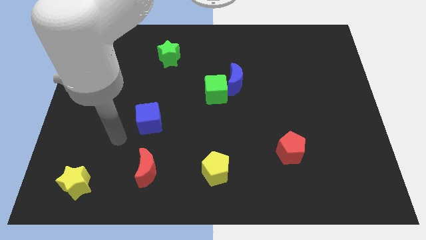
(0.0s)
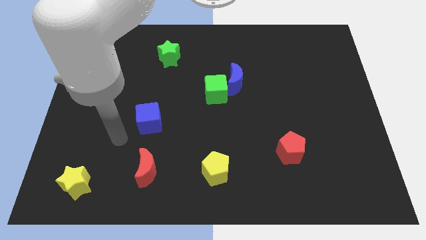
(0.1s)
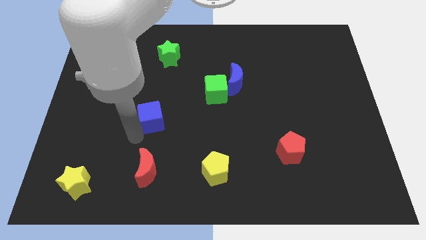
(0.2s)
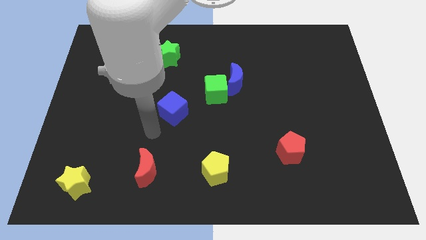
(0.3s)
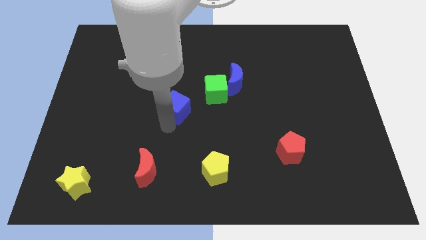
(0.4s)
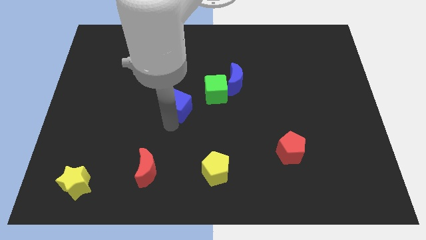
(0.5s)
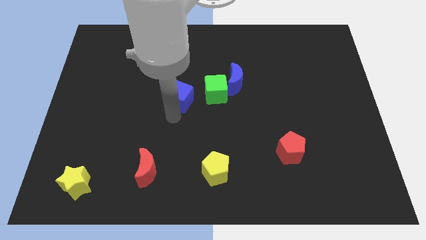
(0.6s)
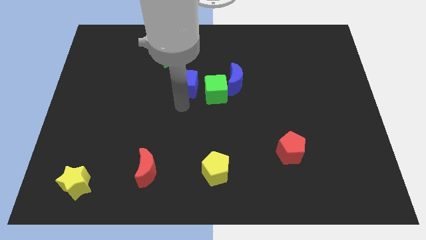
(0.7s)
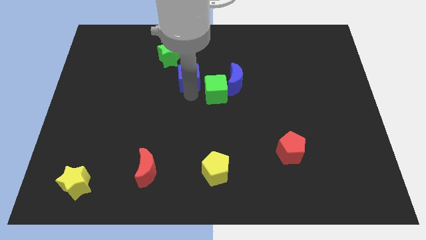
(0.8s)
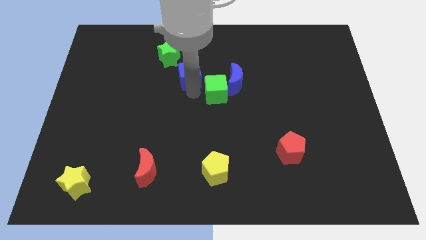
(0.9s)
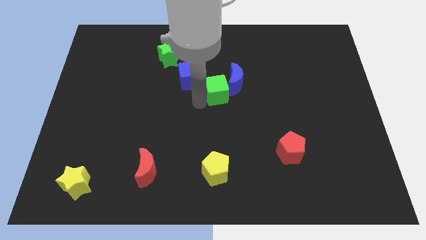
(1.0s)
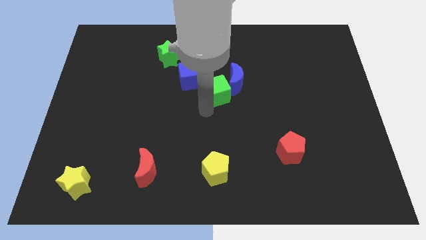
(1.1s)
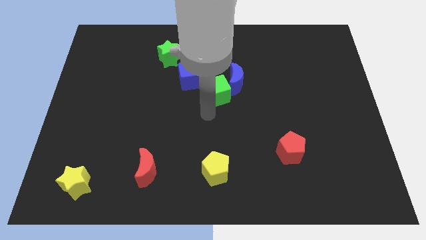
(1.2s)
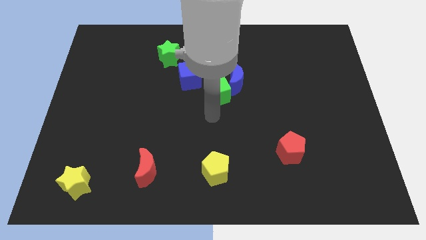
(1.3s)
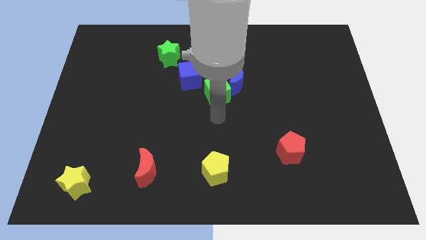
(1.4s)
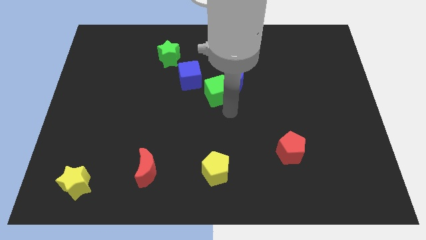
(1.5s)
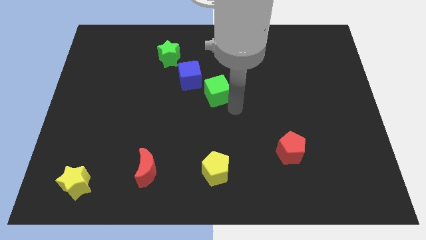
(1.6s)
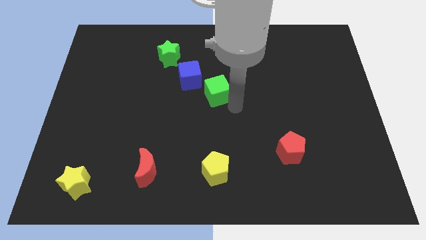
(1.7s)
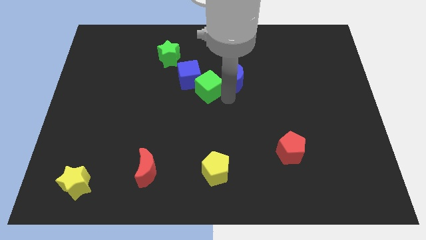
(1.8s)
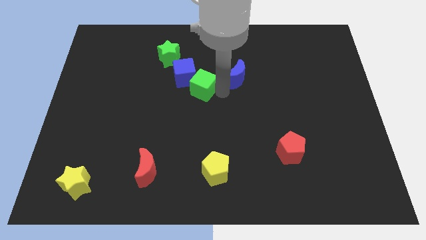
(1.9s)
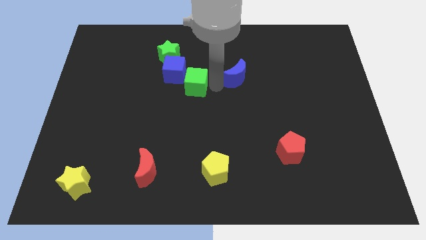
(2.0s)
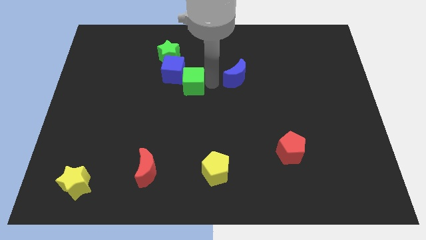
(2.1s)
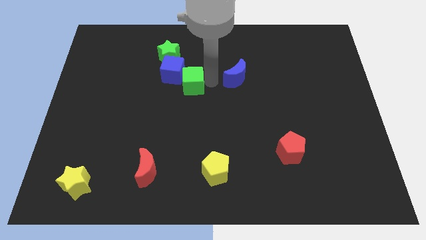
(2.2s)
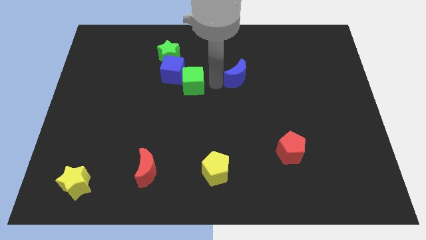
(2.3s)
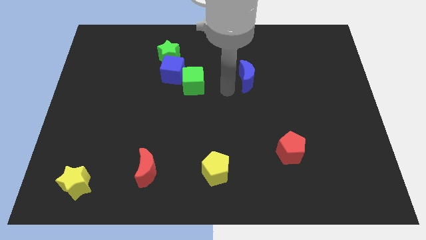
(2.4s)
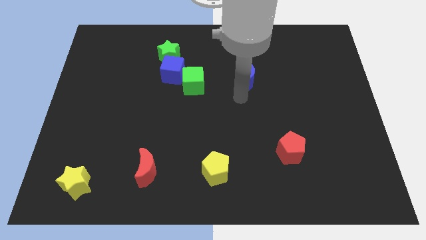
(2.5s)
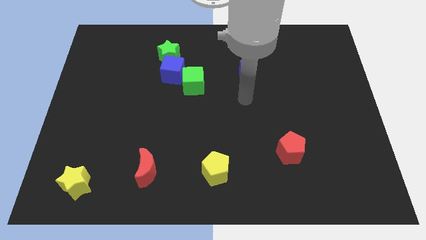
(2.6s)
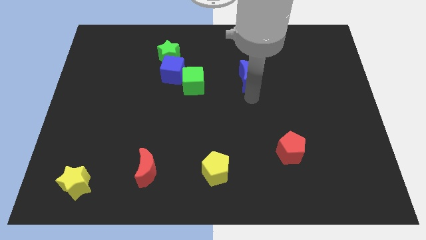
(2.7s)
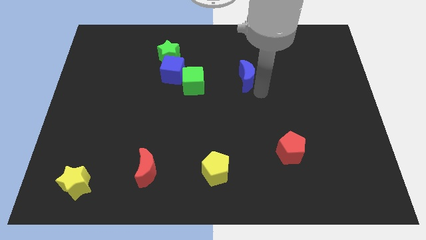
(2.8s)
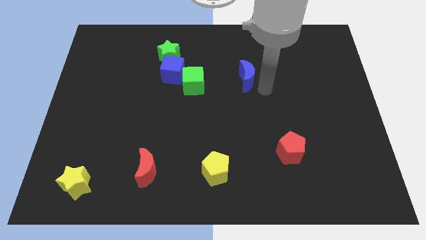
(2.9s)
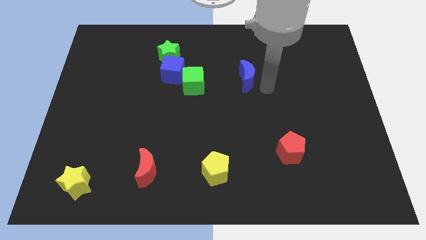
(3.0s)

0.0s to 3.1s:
place blue cube below green star

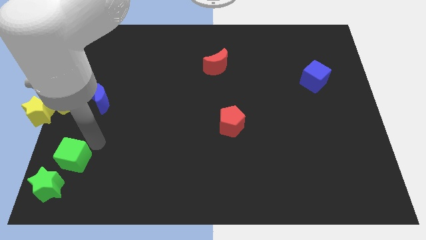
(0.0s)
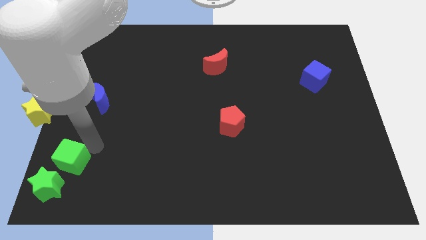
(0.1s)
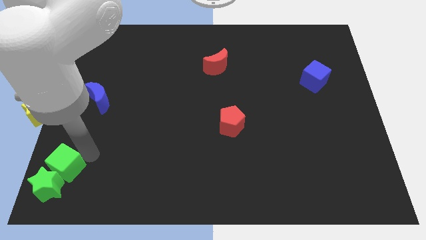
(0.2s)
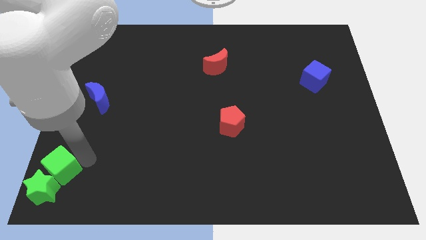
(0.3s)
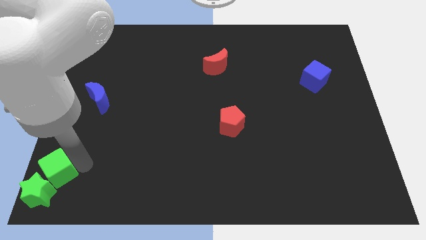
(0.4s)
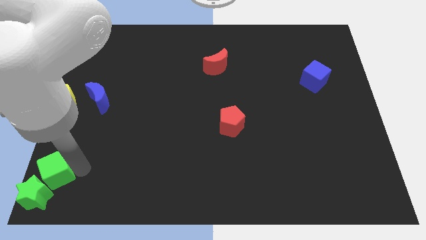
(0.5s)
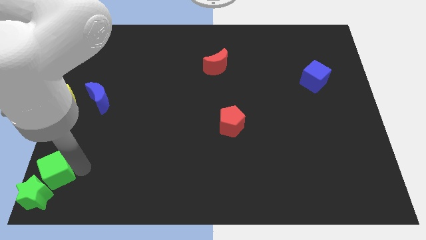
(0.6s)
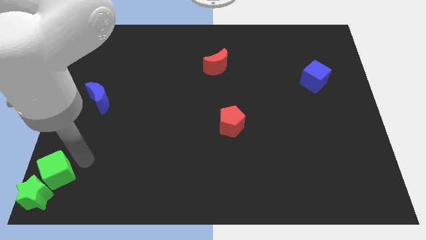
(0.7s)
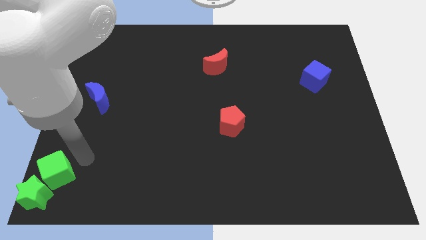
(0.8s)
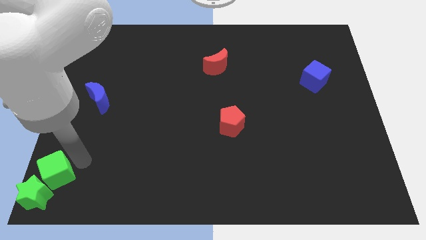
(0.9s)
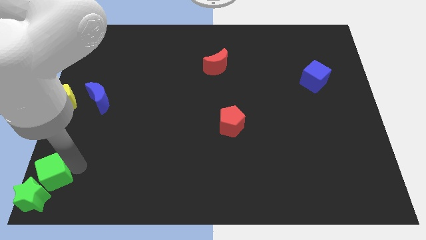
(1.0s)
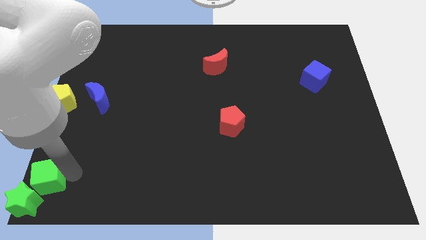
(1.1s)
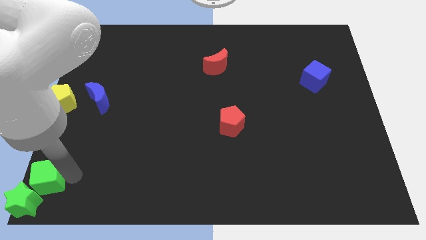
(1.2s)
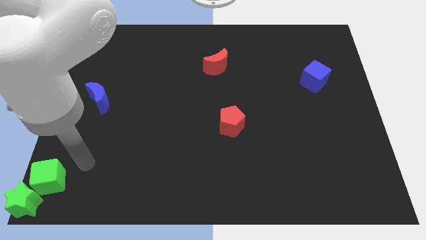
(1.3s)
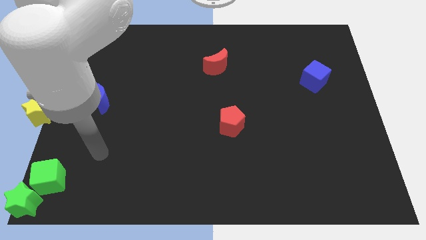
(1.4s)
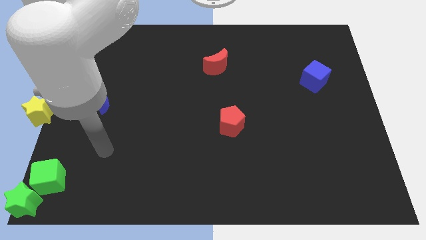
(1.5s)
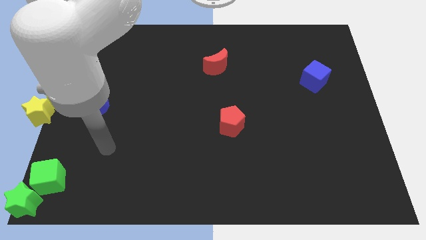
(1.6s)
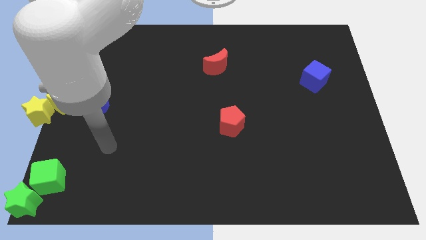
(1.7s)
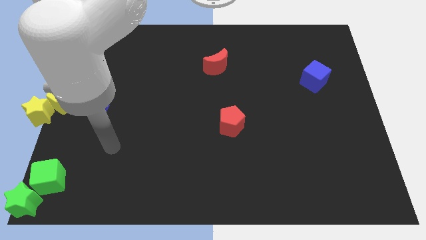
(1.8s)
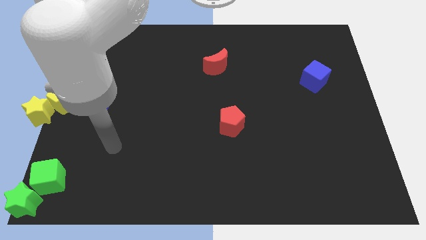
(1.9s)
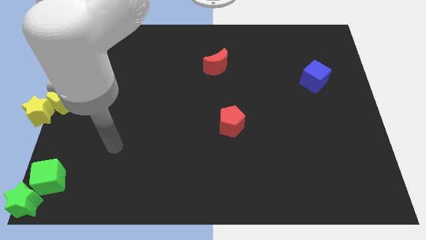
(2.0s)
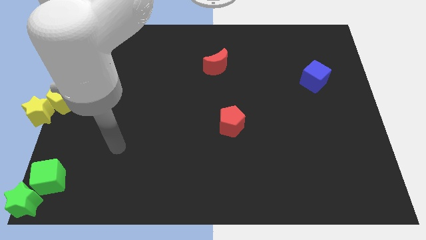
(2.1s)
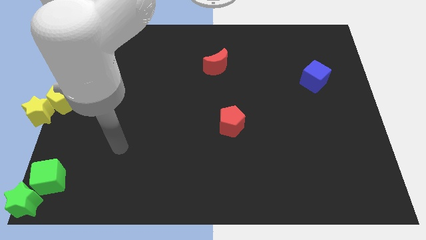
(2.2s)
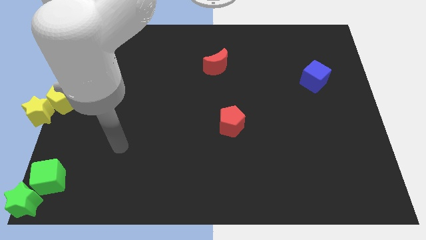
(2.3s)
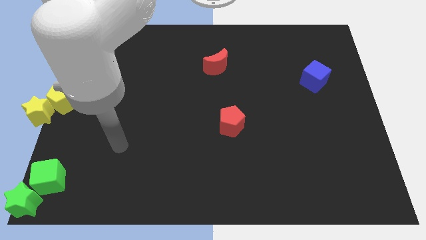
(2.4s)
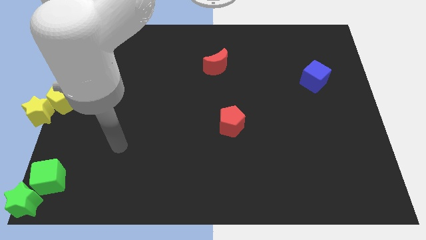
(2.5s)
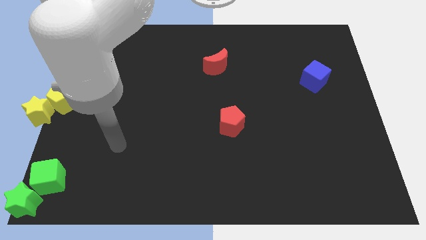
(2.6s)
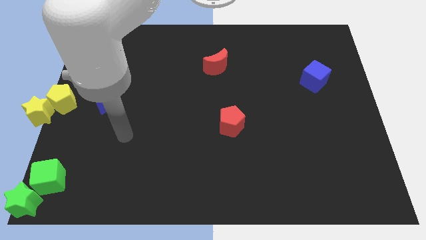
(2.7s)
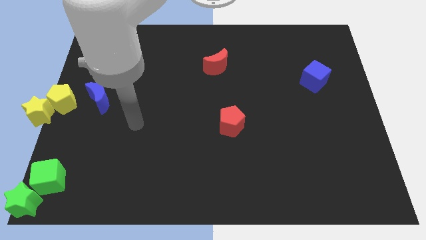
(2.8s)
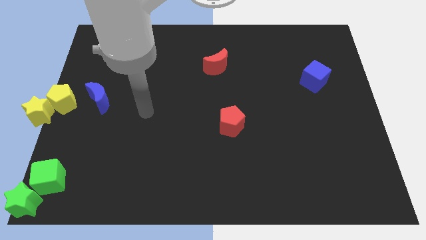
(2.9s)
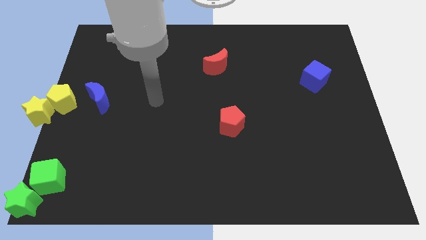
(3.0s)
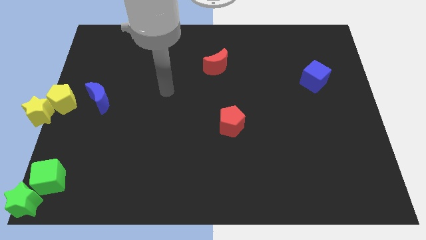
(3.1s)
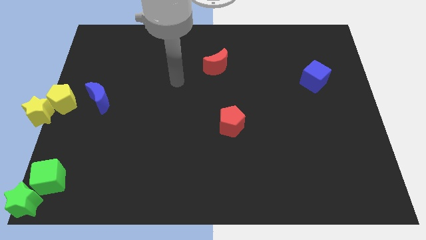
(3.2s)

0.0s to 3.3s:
push the green cube in to green star

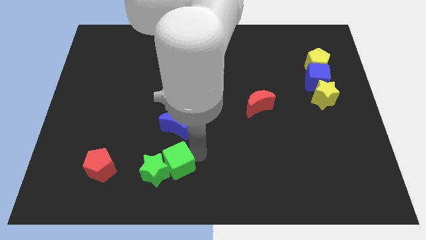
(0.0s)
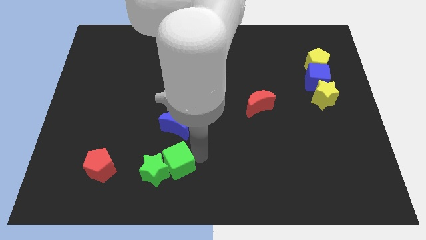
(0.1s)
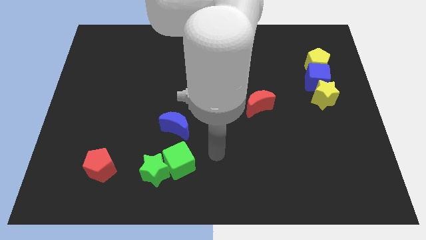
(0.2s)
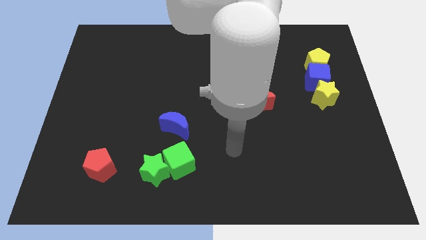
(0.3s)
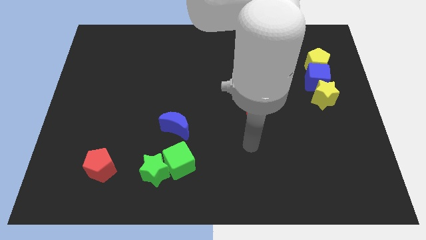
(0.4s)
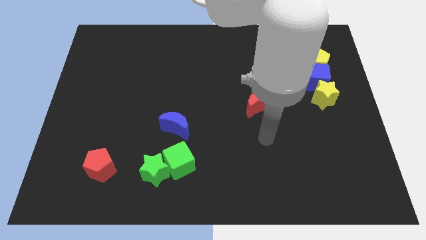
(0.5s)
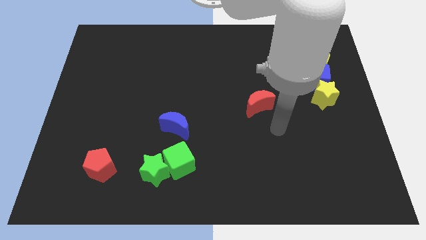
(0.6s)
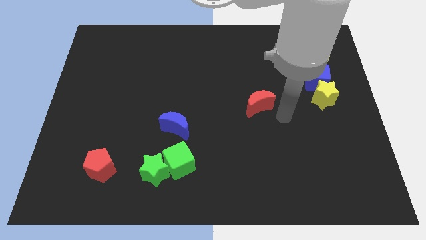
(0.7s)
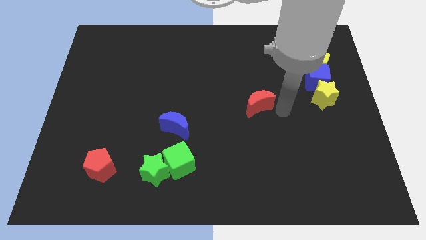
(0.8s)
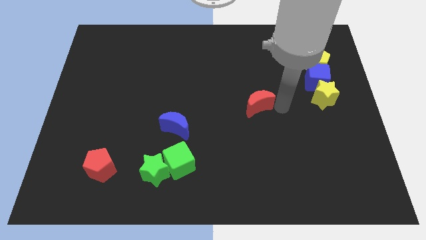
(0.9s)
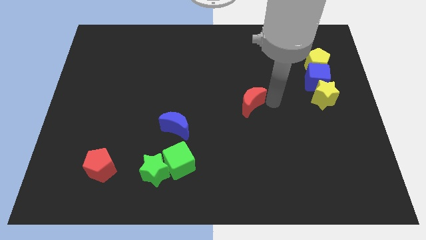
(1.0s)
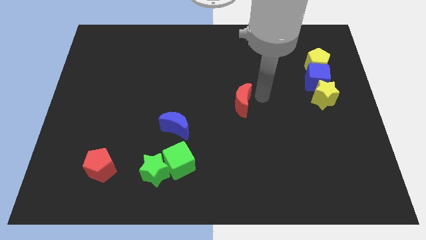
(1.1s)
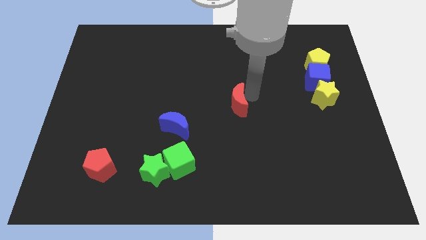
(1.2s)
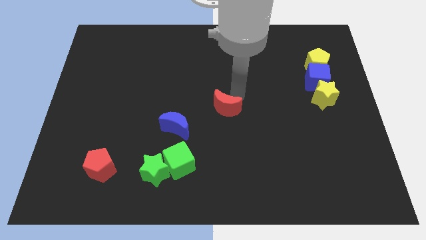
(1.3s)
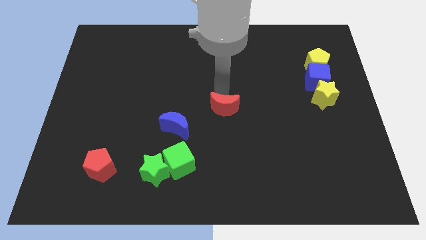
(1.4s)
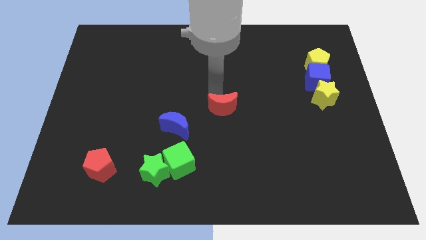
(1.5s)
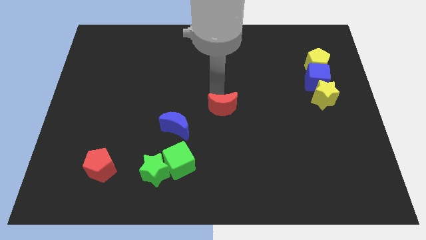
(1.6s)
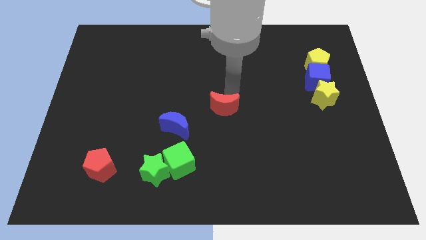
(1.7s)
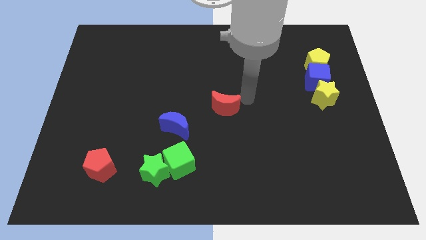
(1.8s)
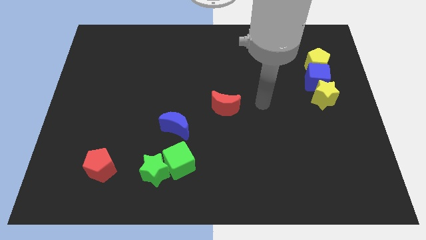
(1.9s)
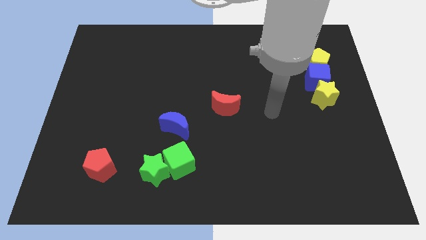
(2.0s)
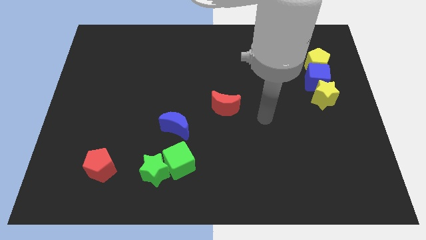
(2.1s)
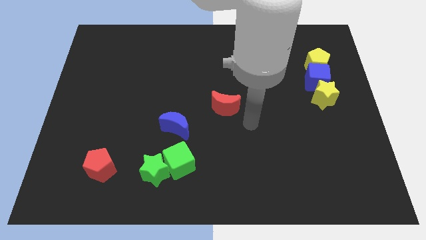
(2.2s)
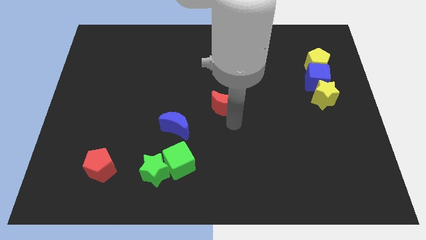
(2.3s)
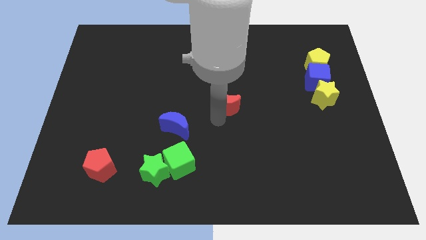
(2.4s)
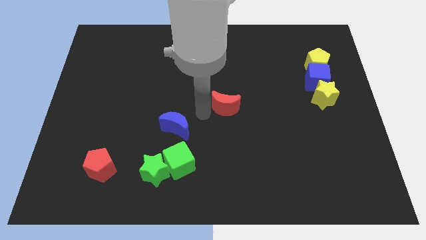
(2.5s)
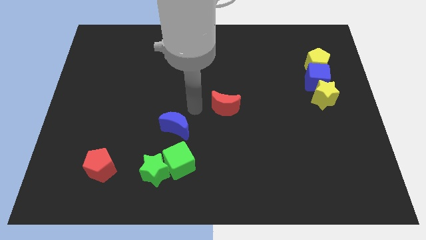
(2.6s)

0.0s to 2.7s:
move the arm away from the green cube
